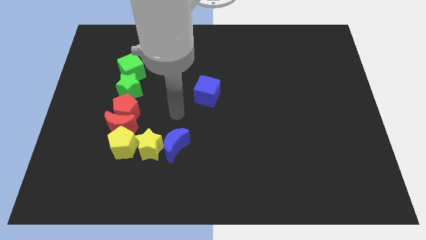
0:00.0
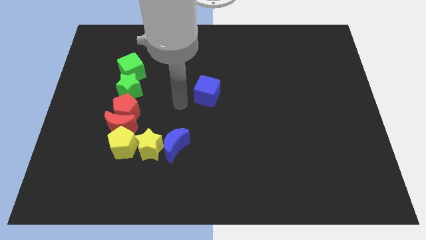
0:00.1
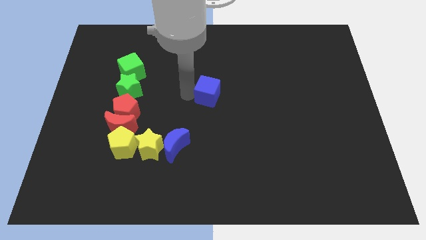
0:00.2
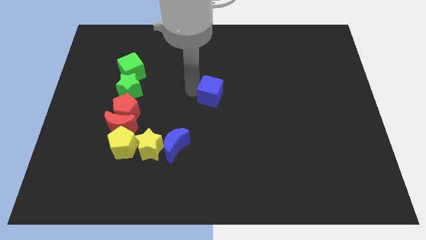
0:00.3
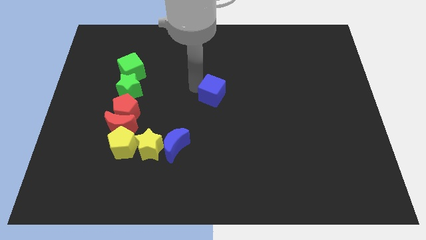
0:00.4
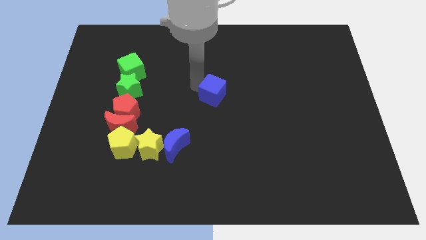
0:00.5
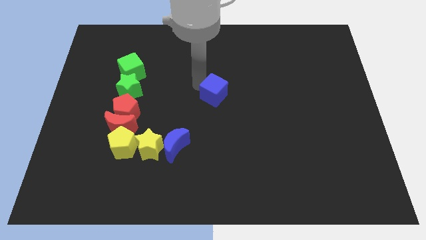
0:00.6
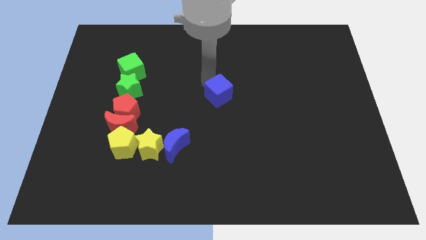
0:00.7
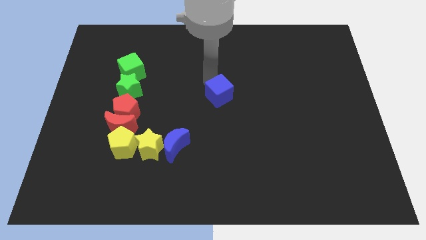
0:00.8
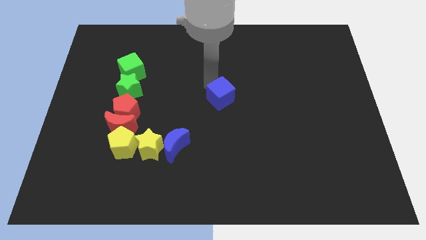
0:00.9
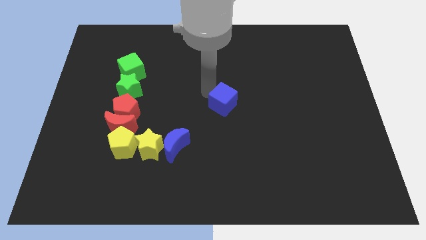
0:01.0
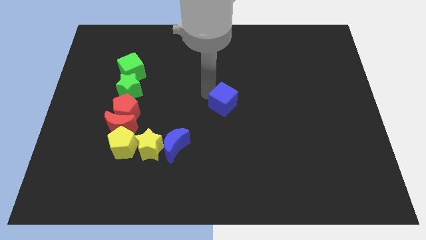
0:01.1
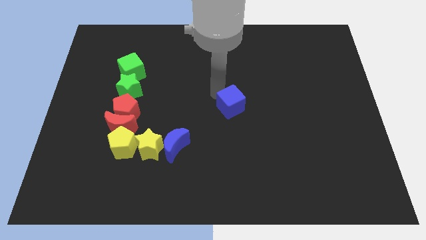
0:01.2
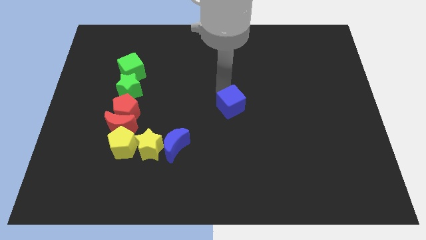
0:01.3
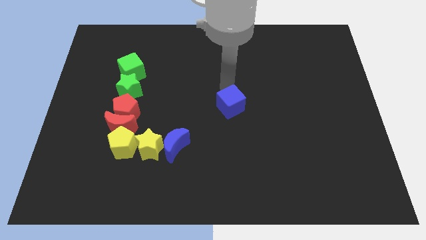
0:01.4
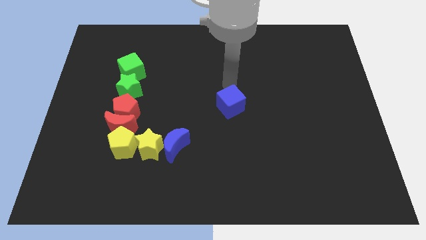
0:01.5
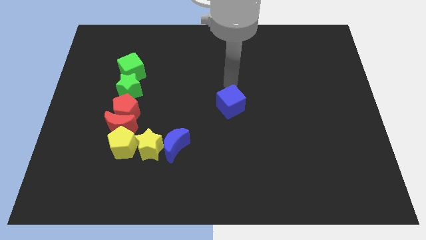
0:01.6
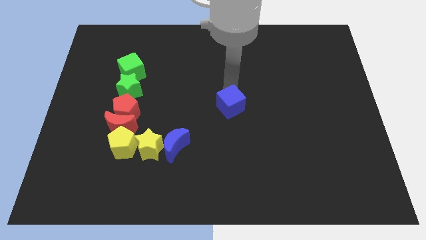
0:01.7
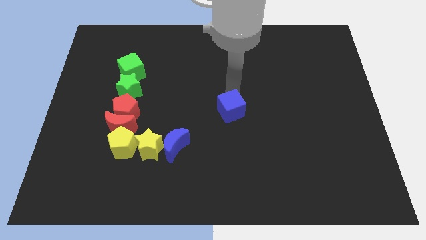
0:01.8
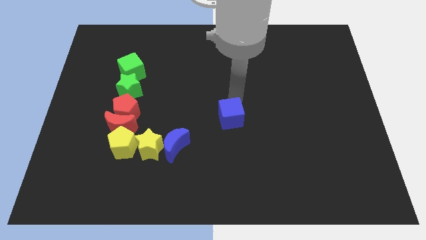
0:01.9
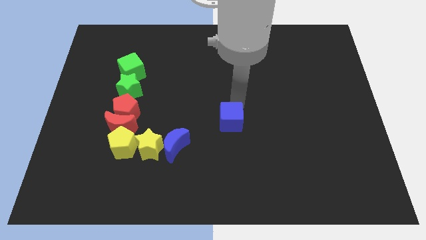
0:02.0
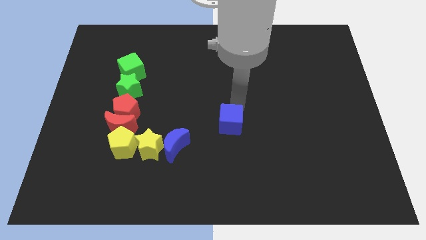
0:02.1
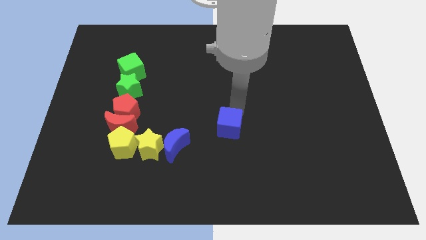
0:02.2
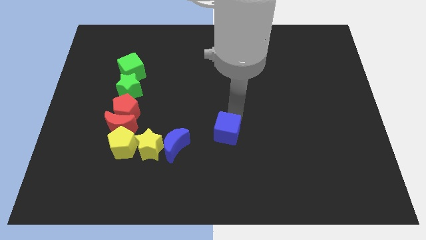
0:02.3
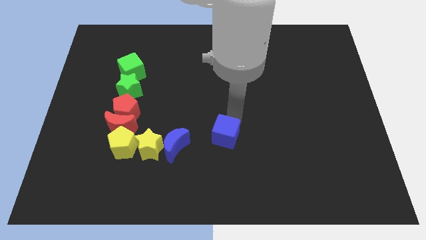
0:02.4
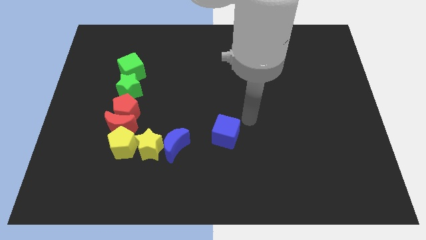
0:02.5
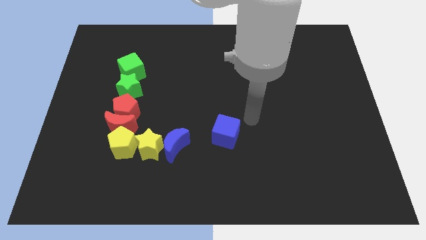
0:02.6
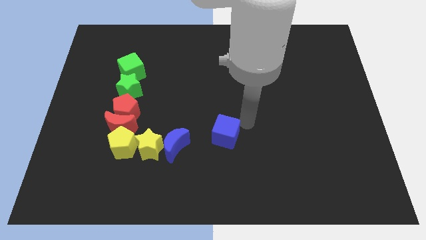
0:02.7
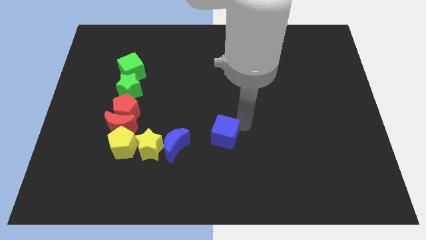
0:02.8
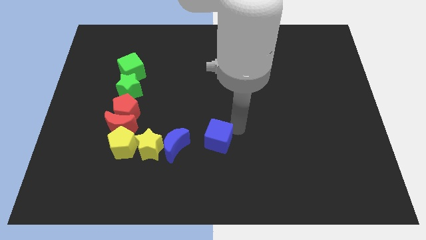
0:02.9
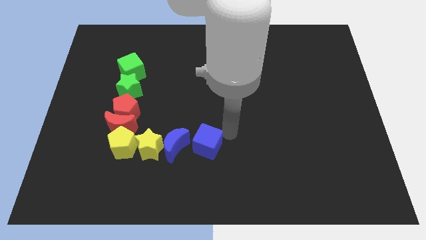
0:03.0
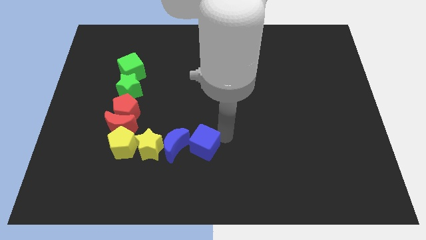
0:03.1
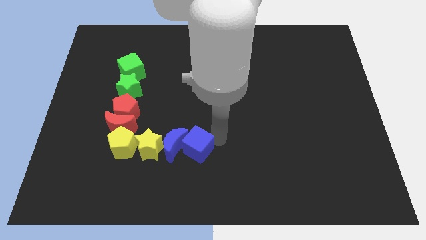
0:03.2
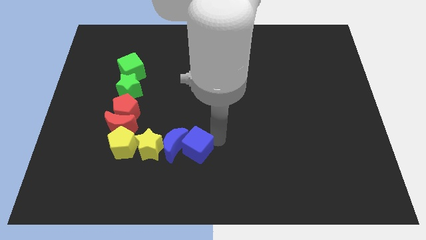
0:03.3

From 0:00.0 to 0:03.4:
place blue cube to the right of blue moon

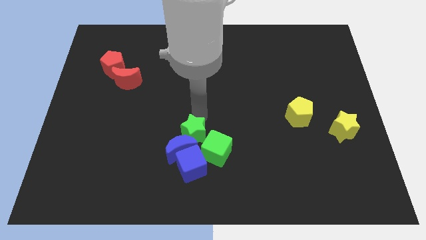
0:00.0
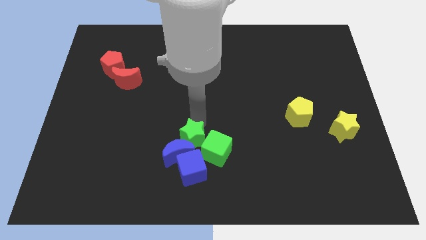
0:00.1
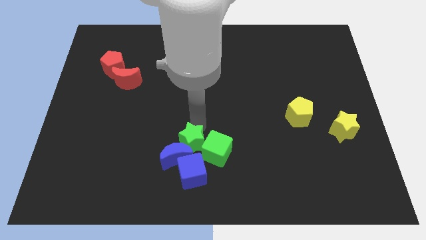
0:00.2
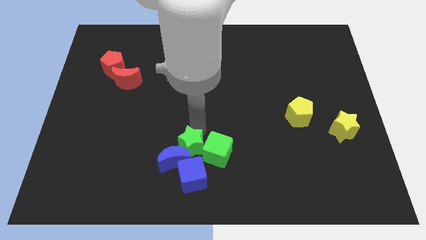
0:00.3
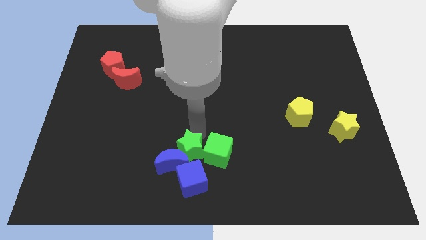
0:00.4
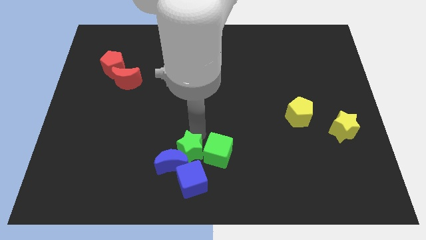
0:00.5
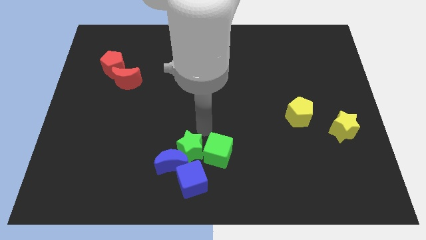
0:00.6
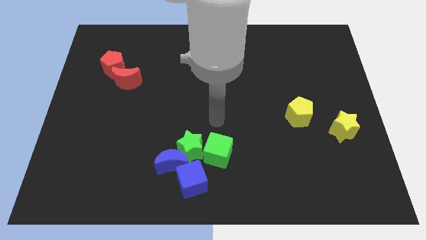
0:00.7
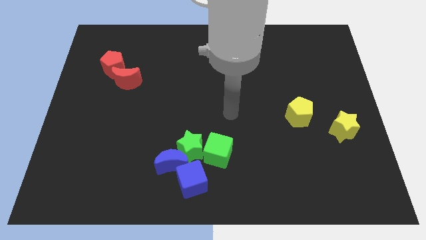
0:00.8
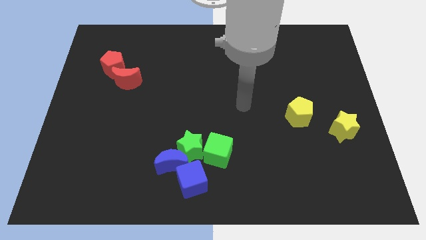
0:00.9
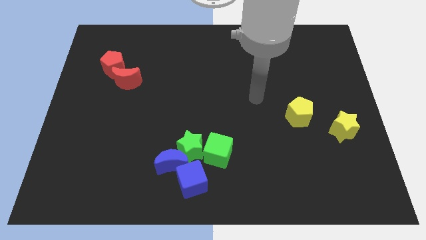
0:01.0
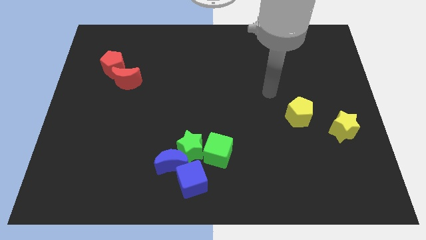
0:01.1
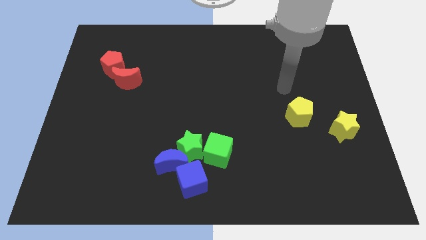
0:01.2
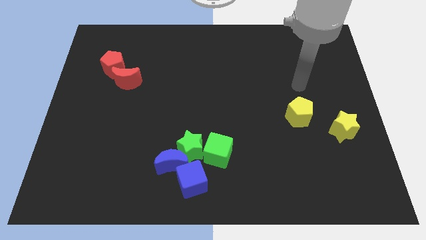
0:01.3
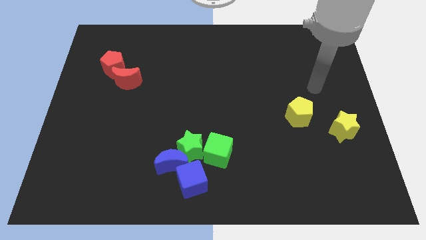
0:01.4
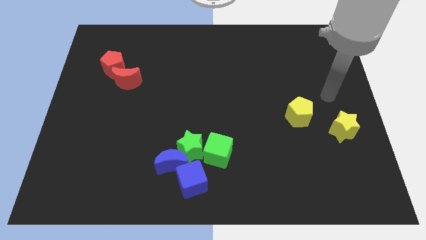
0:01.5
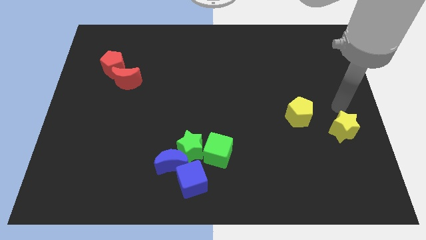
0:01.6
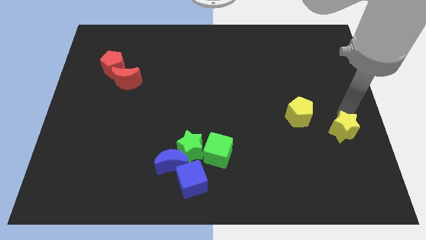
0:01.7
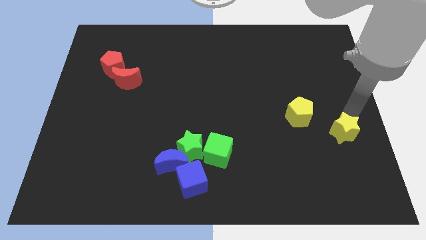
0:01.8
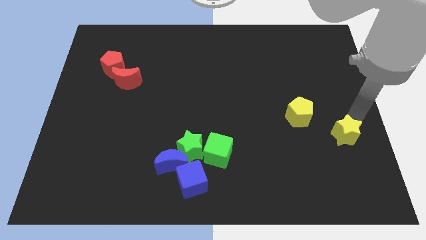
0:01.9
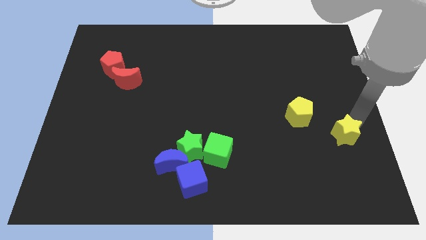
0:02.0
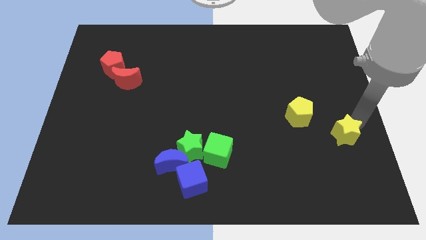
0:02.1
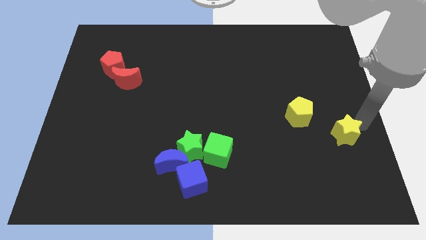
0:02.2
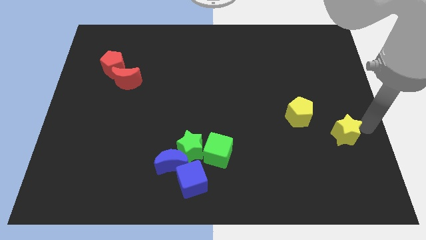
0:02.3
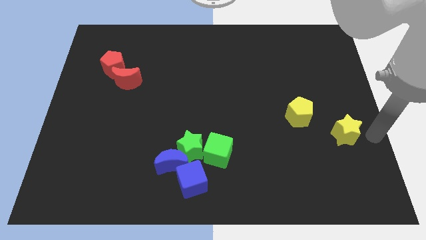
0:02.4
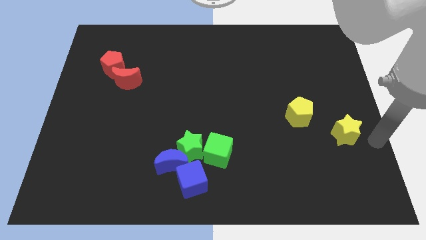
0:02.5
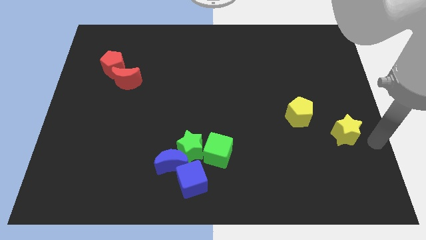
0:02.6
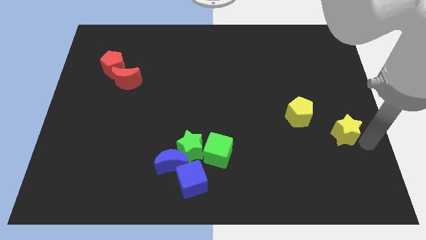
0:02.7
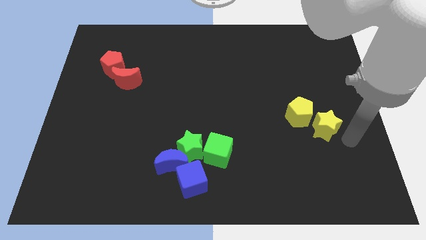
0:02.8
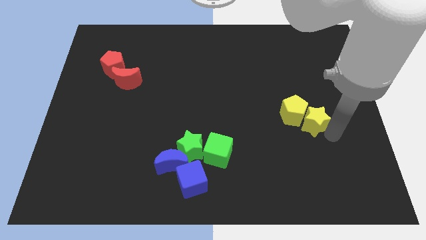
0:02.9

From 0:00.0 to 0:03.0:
push the yellow star into the yellow pentagon

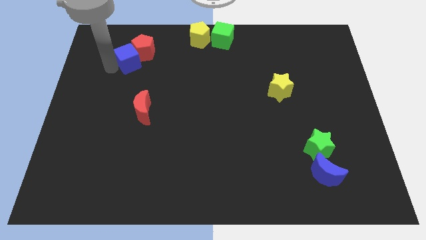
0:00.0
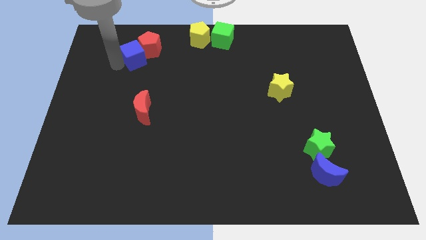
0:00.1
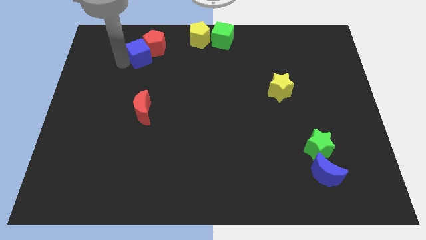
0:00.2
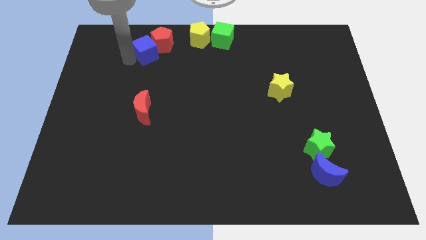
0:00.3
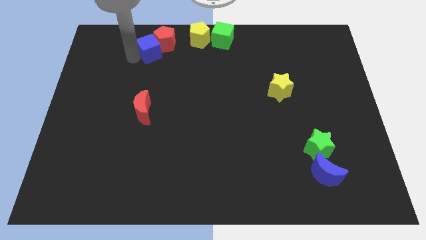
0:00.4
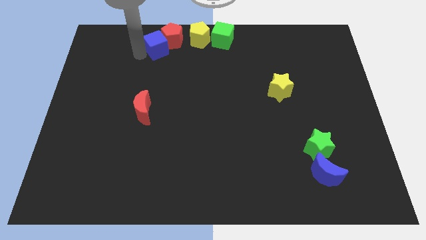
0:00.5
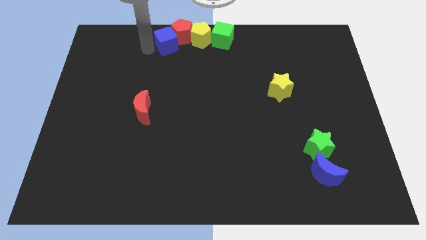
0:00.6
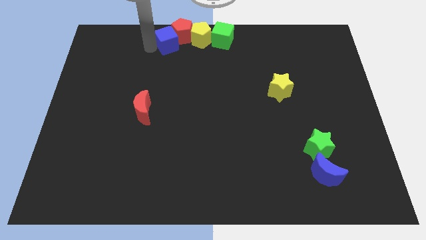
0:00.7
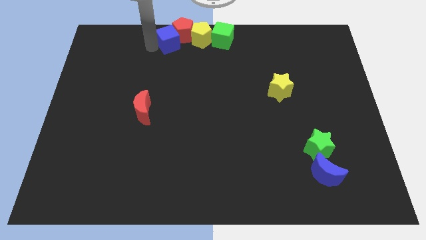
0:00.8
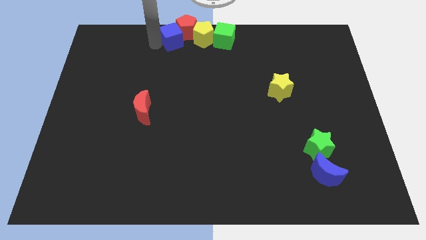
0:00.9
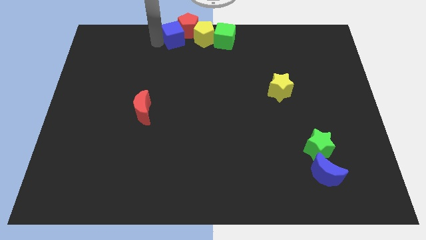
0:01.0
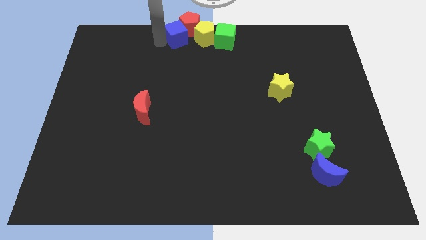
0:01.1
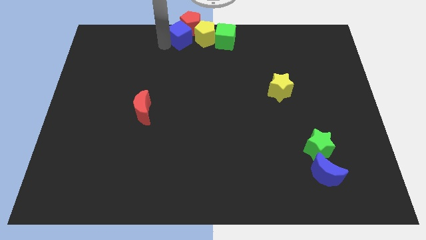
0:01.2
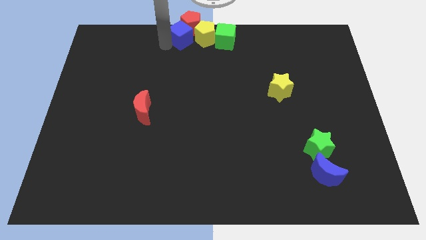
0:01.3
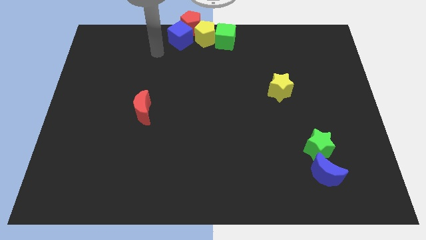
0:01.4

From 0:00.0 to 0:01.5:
make a group of blue cube red pentagon yellow pentagon and green cube

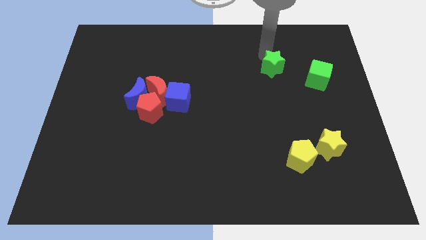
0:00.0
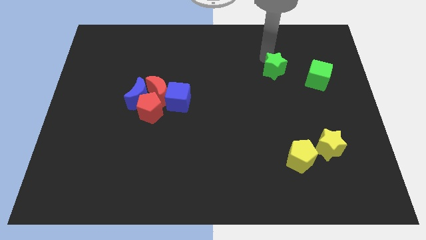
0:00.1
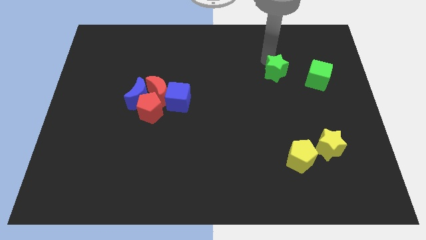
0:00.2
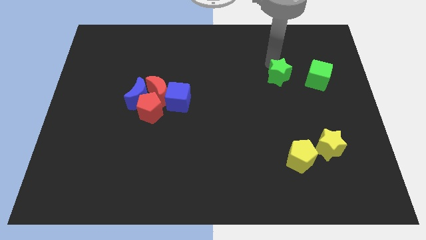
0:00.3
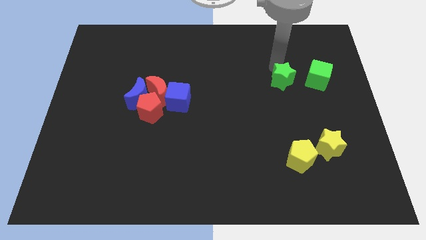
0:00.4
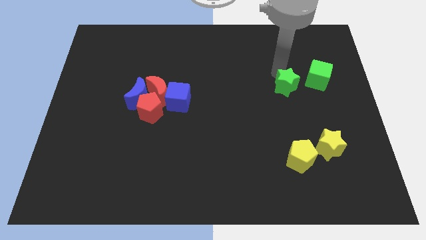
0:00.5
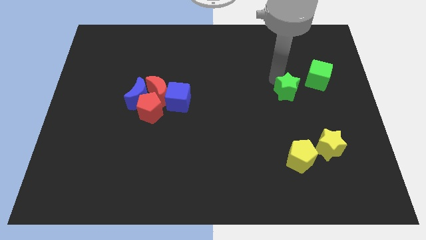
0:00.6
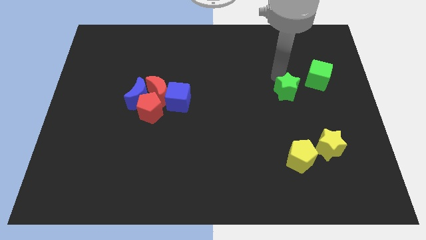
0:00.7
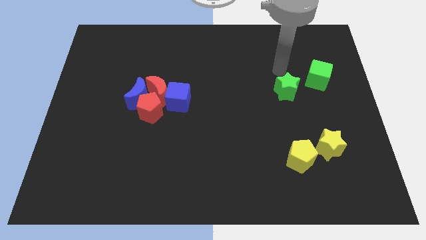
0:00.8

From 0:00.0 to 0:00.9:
push green star slightly downwards

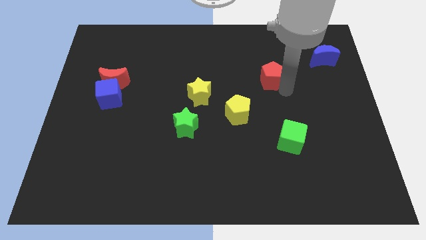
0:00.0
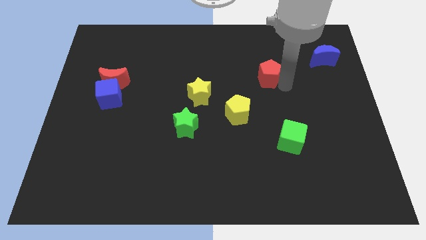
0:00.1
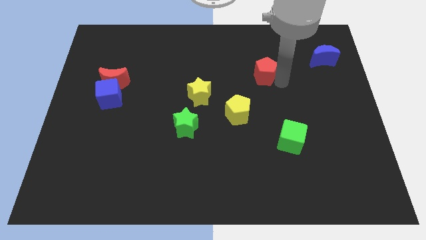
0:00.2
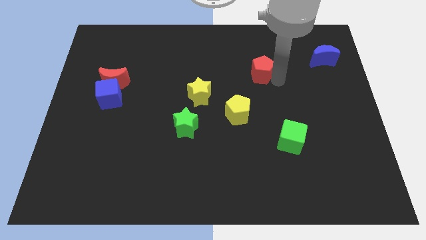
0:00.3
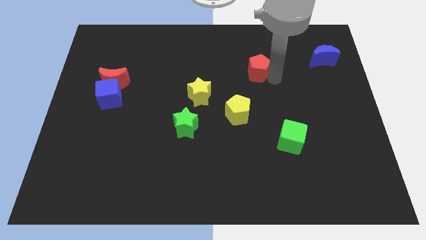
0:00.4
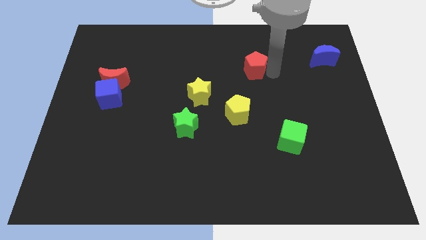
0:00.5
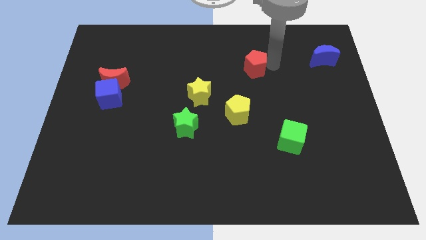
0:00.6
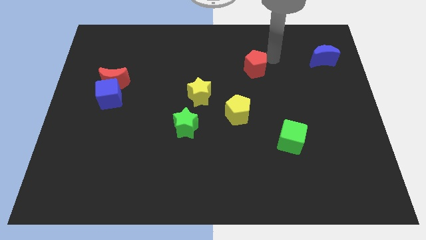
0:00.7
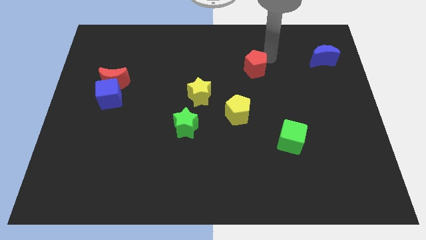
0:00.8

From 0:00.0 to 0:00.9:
move the red pentagon to the top left of the board
